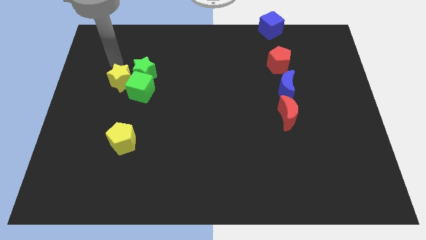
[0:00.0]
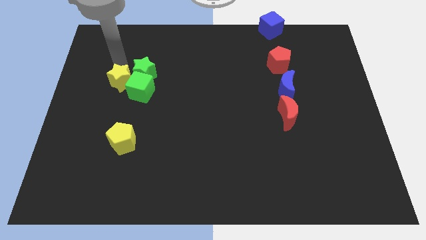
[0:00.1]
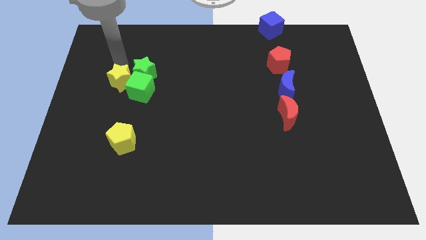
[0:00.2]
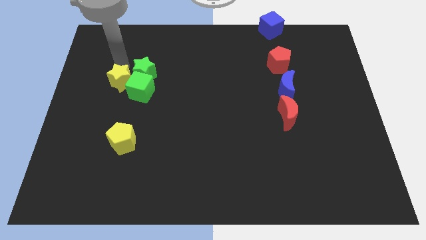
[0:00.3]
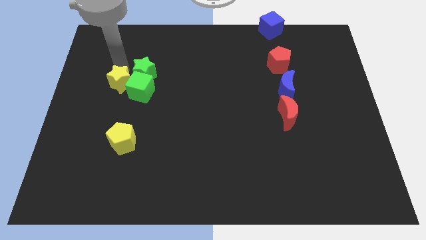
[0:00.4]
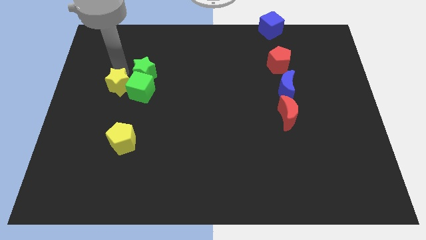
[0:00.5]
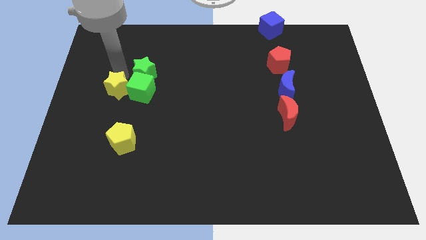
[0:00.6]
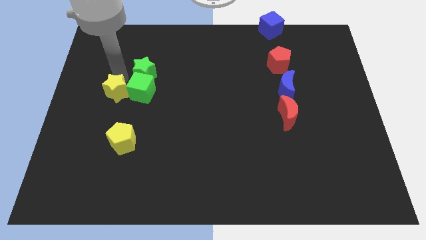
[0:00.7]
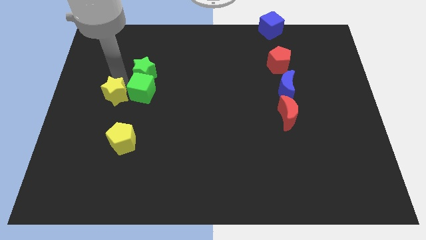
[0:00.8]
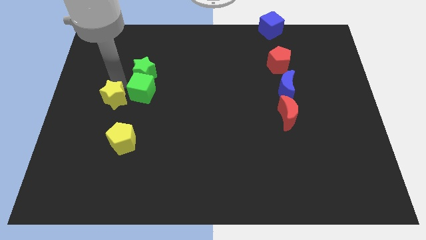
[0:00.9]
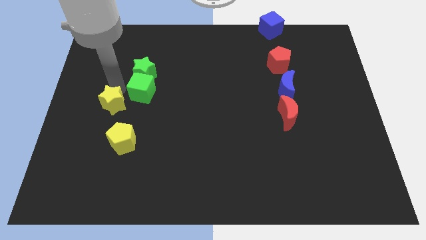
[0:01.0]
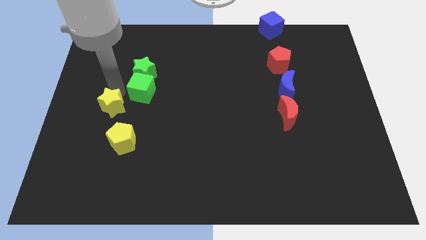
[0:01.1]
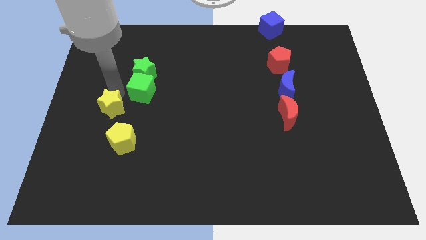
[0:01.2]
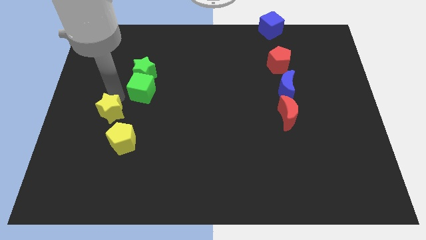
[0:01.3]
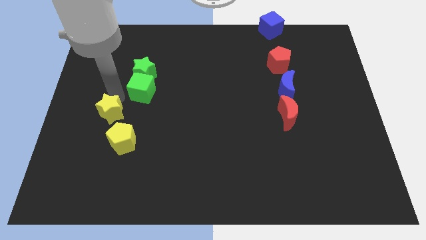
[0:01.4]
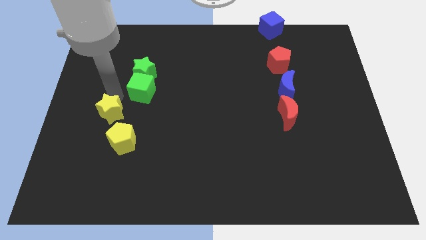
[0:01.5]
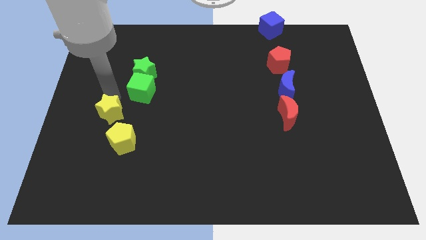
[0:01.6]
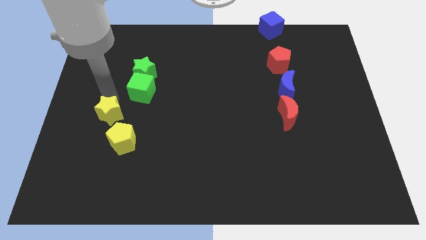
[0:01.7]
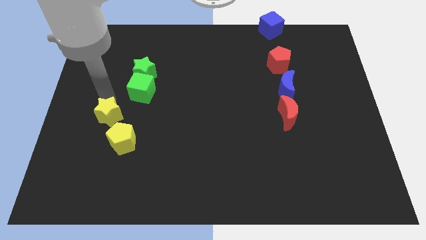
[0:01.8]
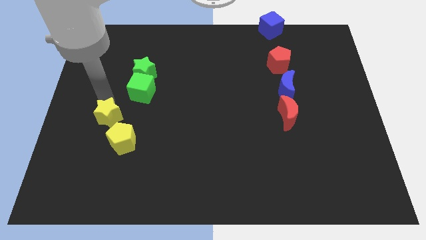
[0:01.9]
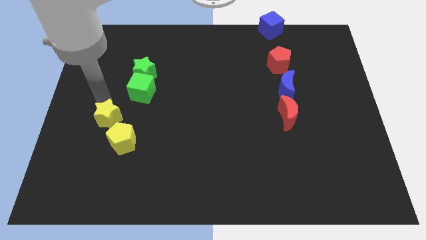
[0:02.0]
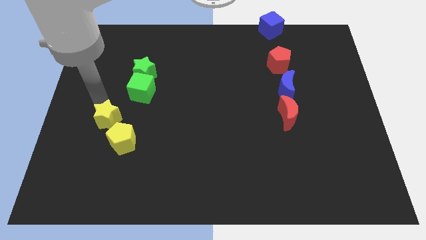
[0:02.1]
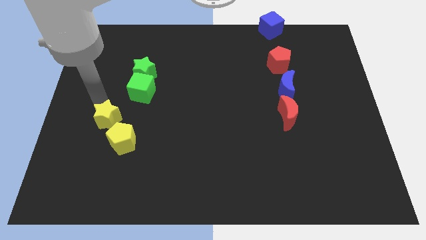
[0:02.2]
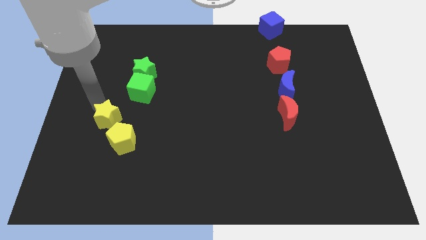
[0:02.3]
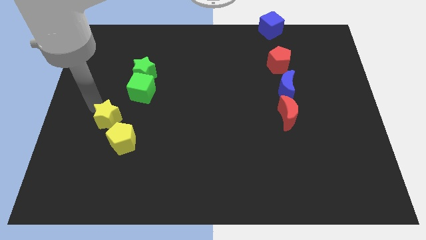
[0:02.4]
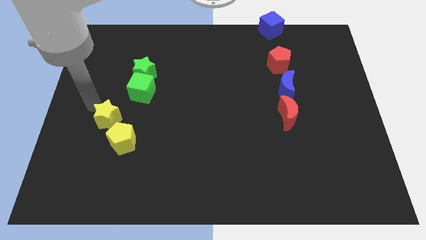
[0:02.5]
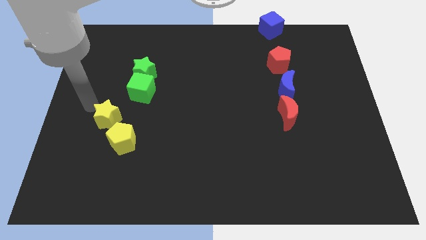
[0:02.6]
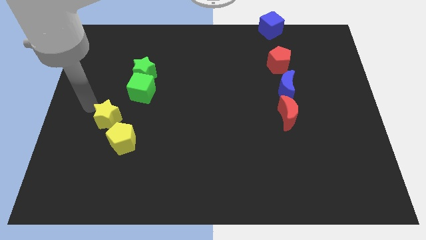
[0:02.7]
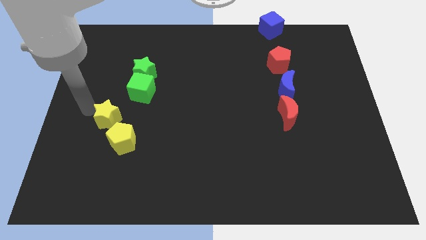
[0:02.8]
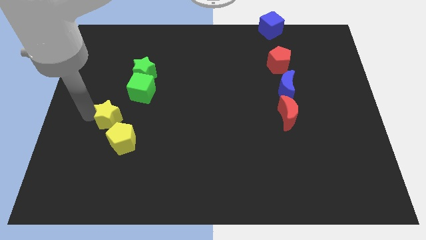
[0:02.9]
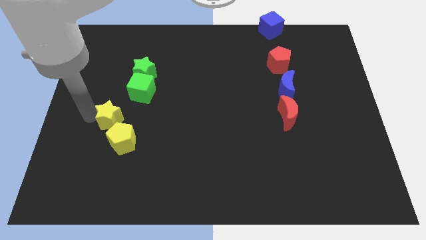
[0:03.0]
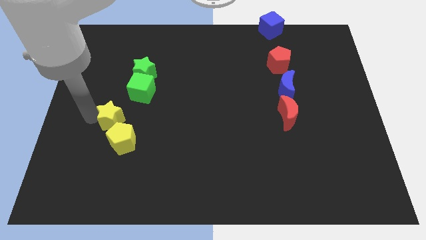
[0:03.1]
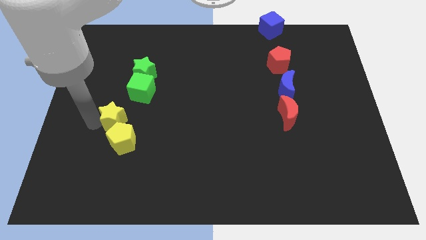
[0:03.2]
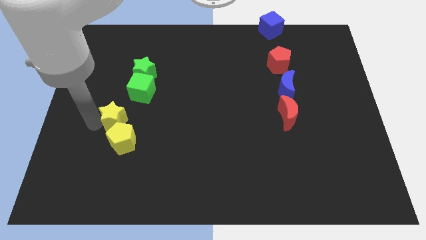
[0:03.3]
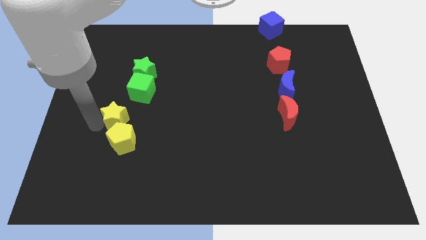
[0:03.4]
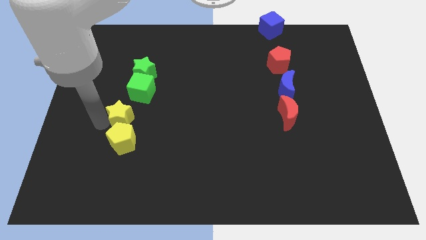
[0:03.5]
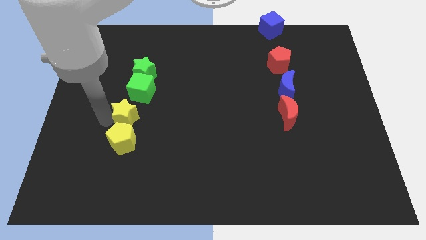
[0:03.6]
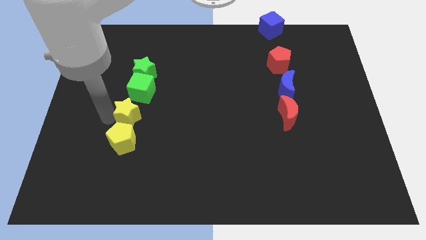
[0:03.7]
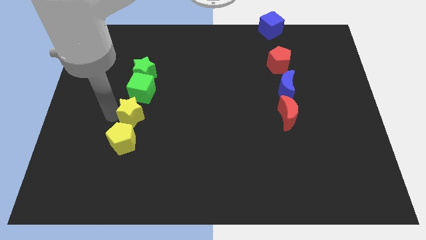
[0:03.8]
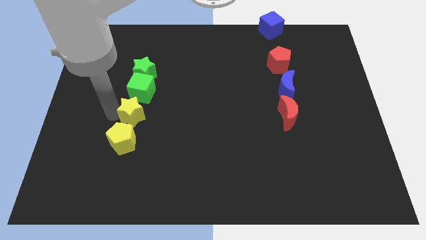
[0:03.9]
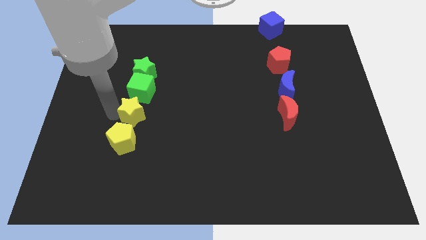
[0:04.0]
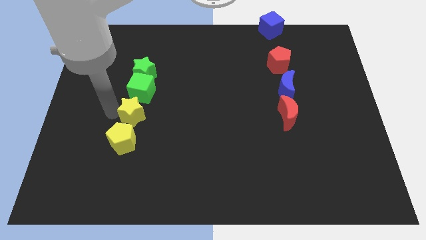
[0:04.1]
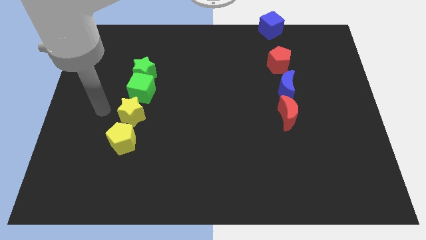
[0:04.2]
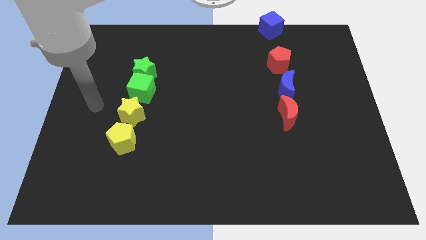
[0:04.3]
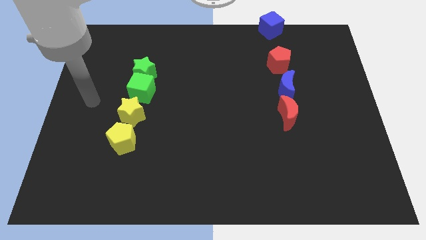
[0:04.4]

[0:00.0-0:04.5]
put yellow star at the bottom of green cube

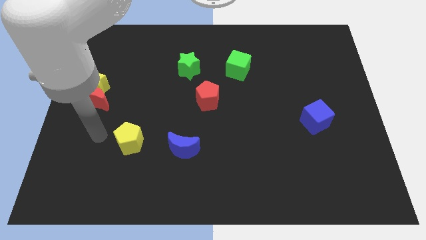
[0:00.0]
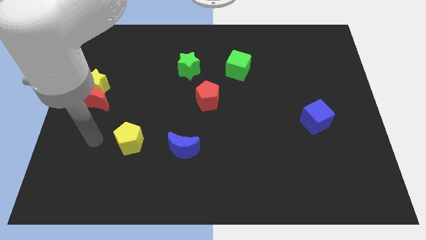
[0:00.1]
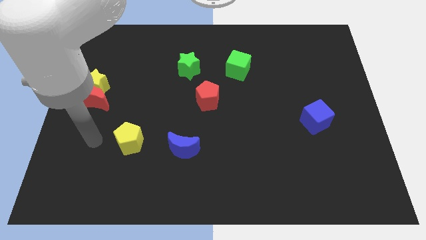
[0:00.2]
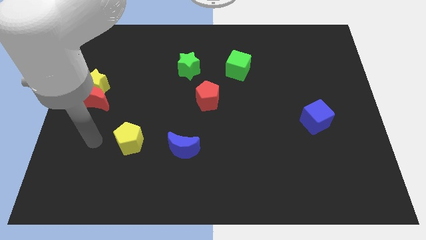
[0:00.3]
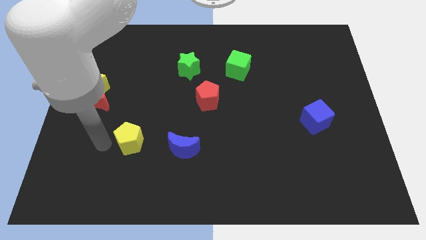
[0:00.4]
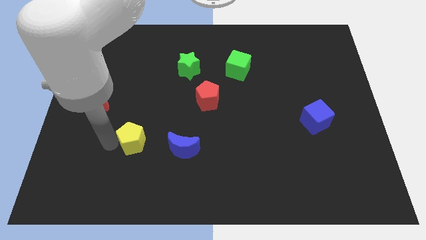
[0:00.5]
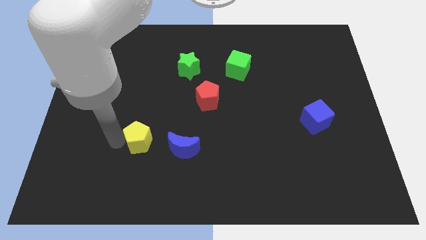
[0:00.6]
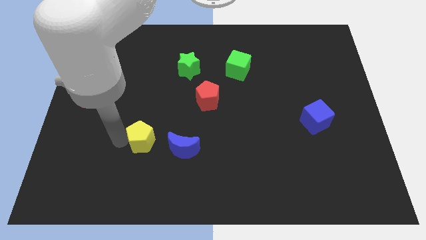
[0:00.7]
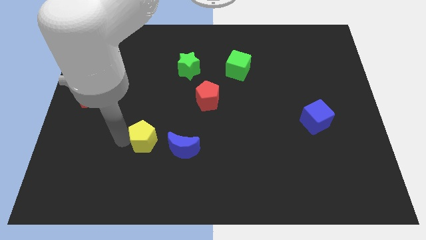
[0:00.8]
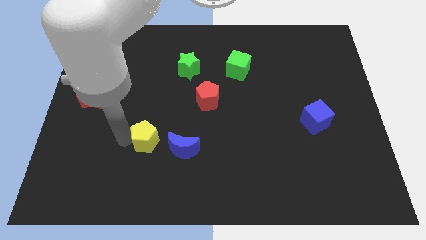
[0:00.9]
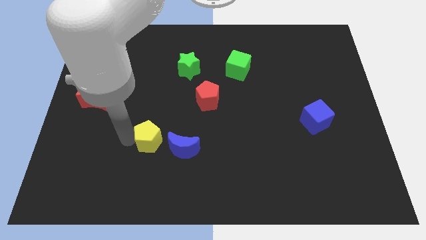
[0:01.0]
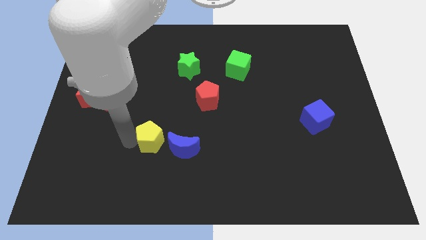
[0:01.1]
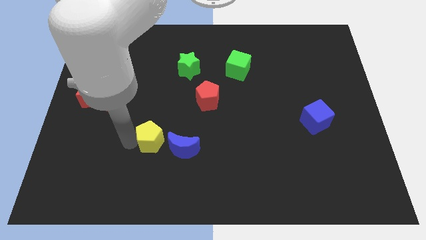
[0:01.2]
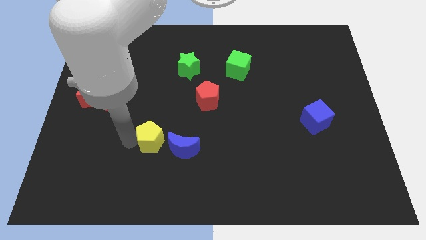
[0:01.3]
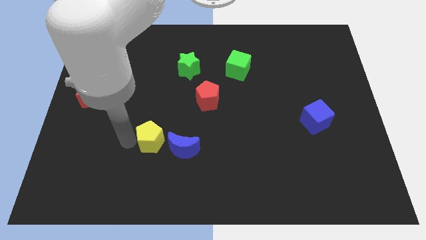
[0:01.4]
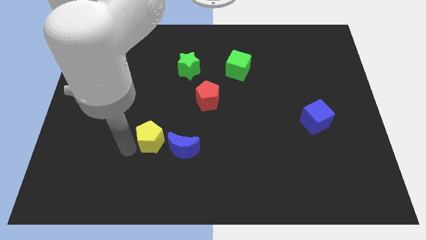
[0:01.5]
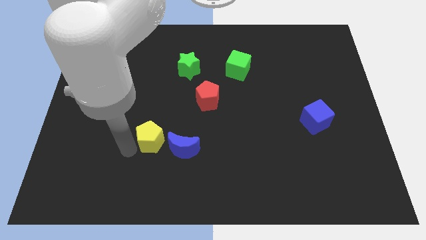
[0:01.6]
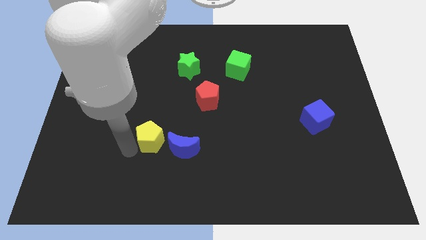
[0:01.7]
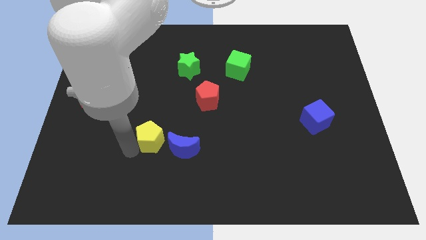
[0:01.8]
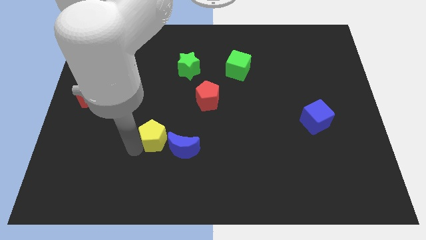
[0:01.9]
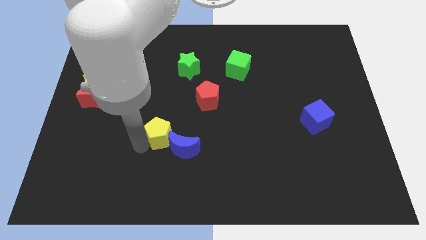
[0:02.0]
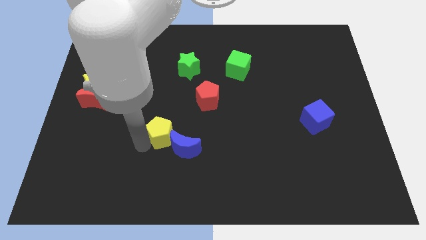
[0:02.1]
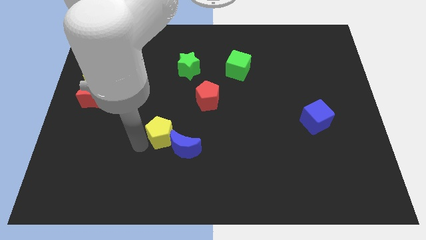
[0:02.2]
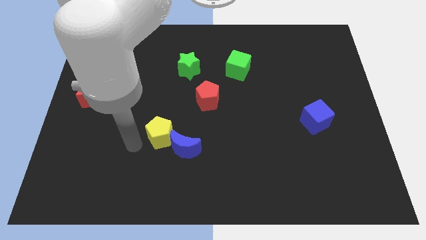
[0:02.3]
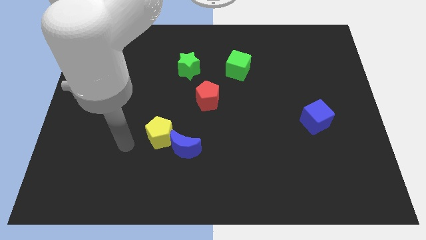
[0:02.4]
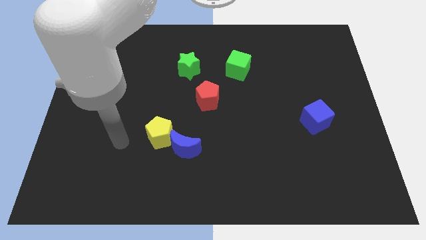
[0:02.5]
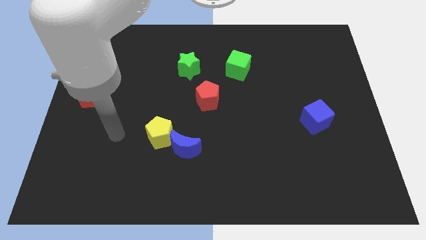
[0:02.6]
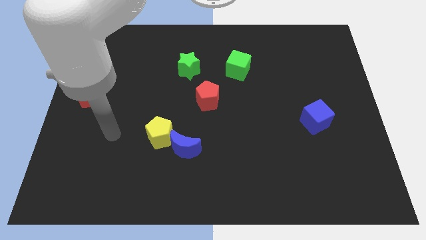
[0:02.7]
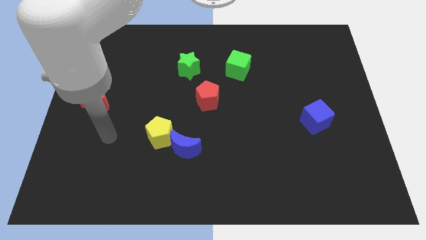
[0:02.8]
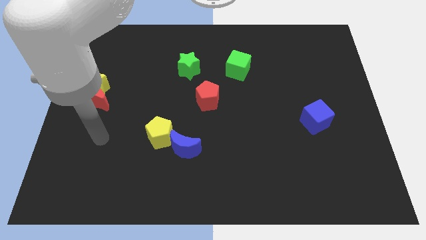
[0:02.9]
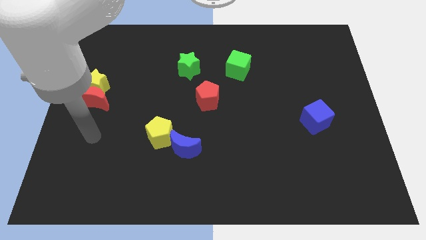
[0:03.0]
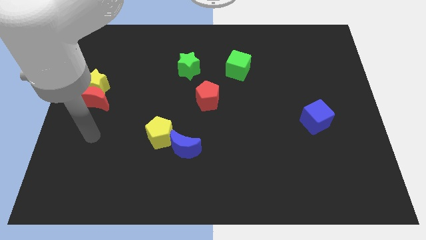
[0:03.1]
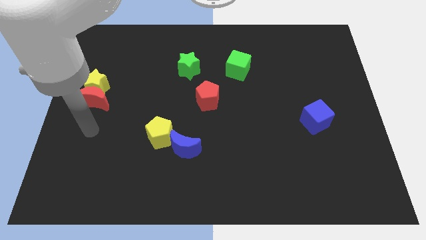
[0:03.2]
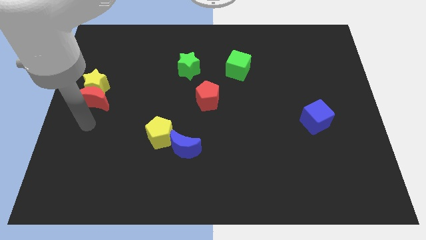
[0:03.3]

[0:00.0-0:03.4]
move the yellow pentagon to the left side of the blue crescent

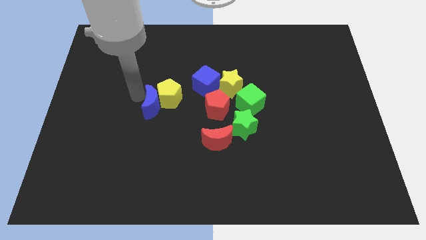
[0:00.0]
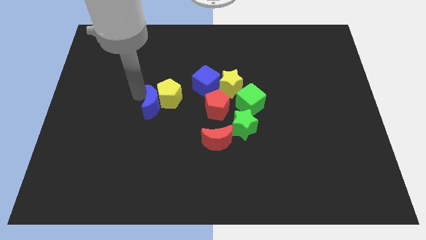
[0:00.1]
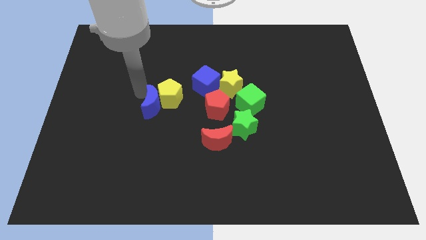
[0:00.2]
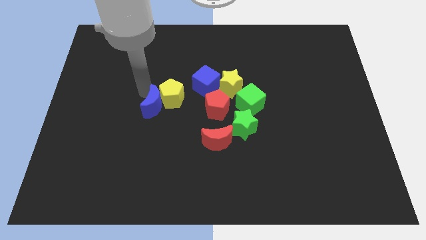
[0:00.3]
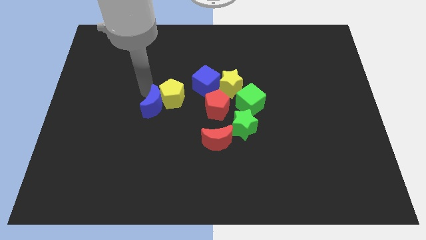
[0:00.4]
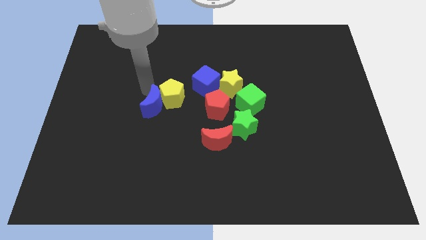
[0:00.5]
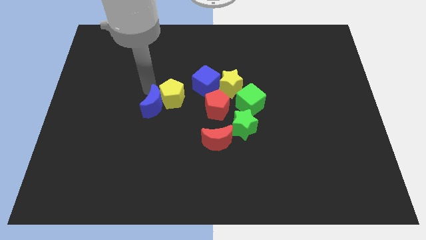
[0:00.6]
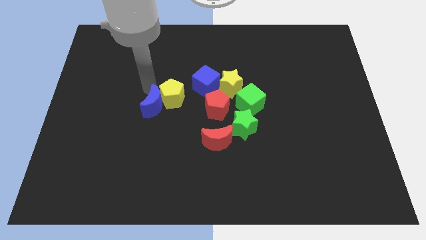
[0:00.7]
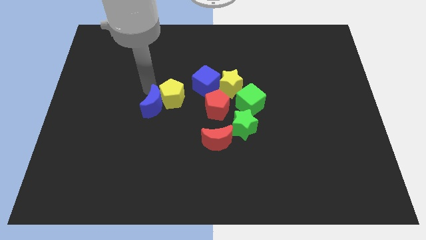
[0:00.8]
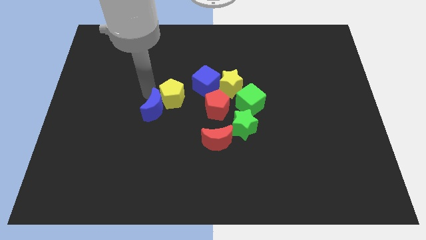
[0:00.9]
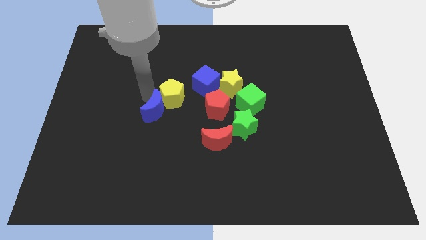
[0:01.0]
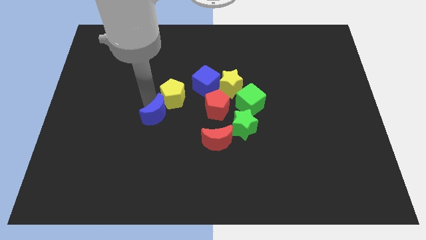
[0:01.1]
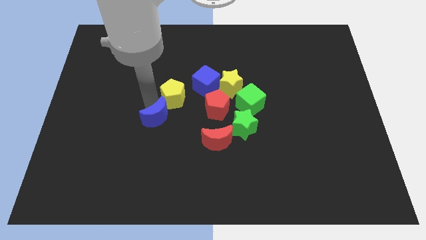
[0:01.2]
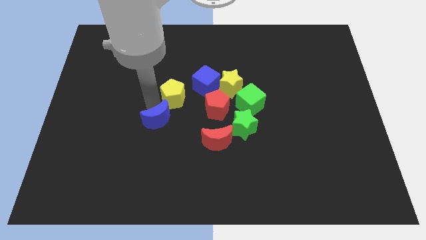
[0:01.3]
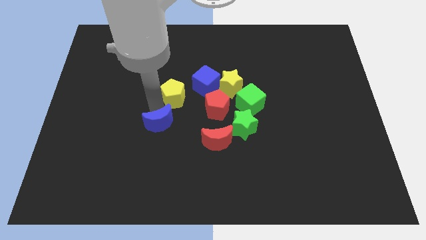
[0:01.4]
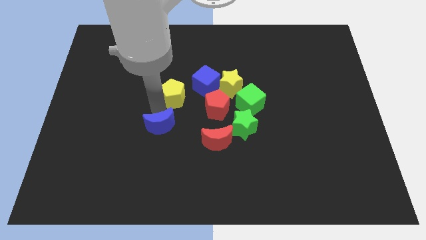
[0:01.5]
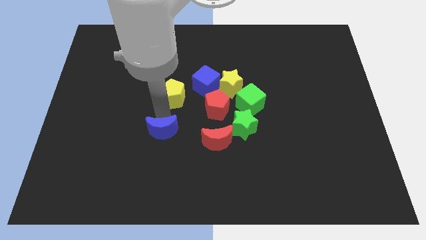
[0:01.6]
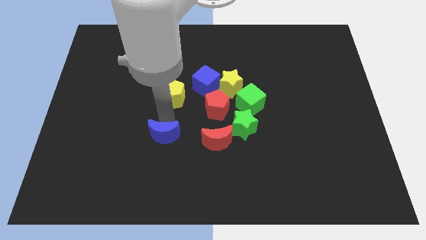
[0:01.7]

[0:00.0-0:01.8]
separate the blue moon from the yellow pentagon
